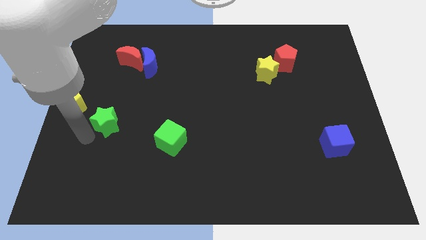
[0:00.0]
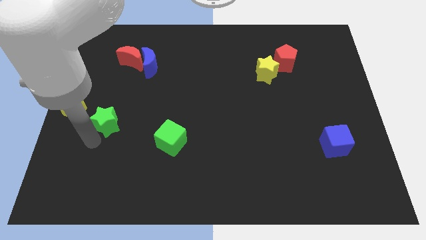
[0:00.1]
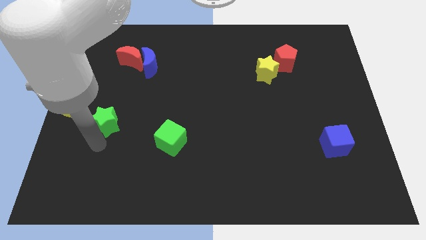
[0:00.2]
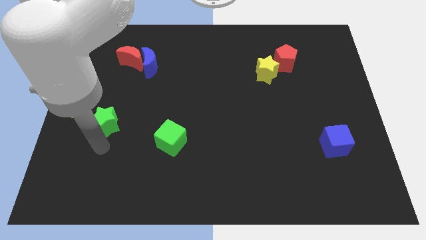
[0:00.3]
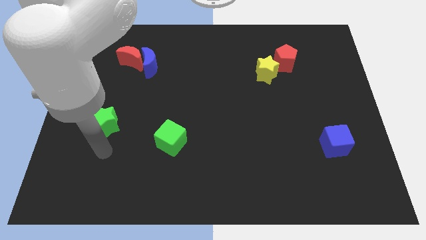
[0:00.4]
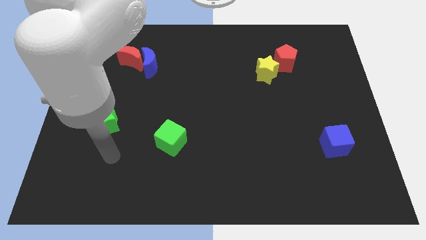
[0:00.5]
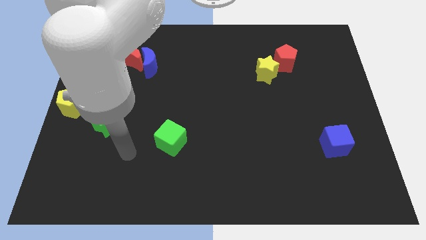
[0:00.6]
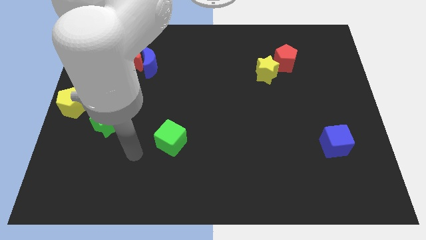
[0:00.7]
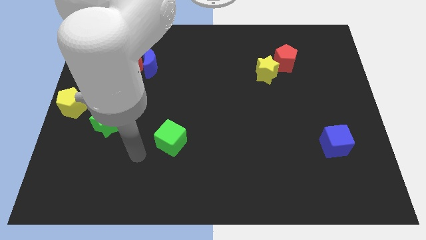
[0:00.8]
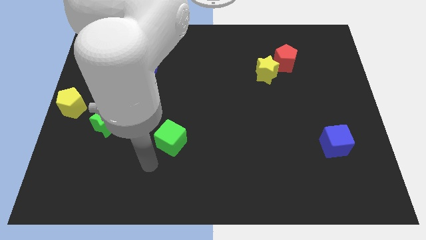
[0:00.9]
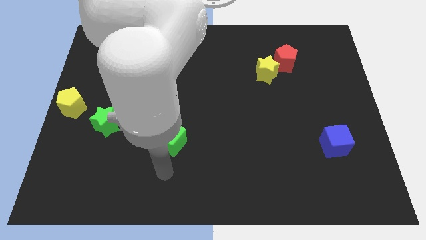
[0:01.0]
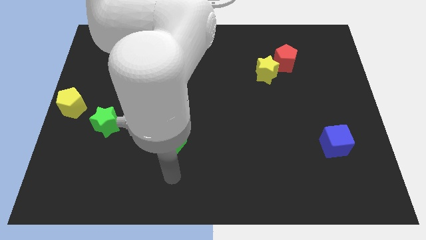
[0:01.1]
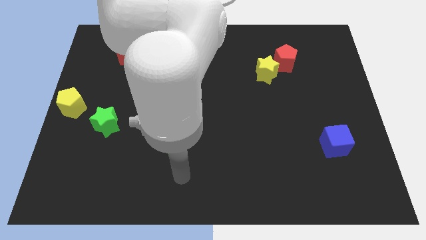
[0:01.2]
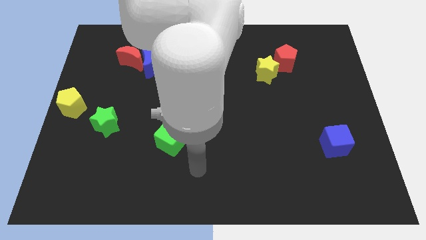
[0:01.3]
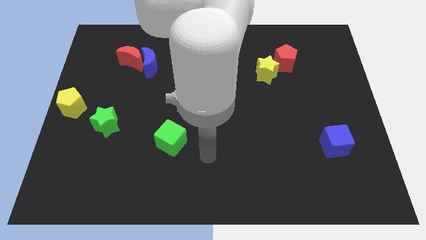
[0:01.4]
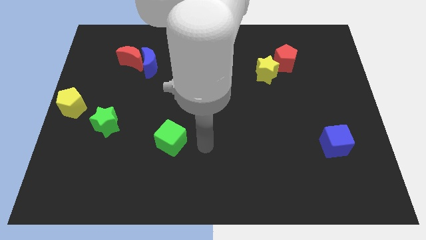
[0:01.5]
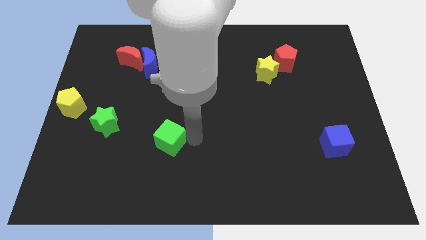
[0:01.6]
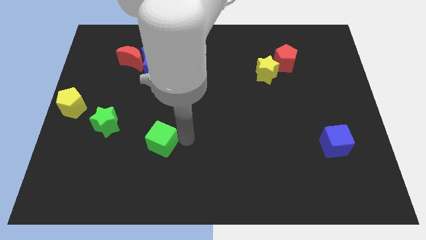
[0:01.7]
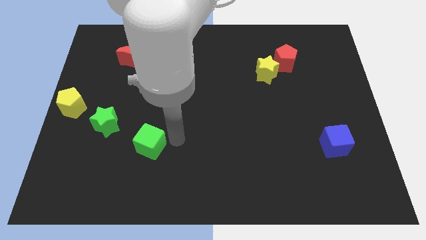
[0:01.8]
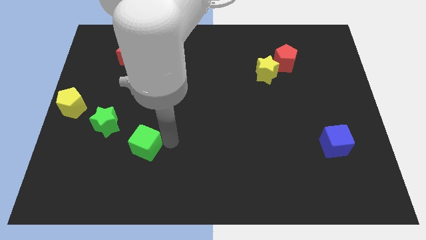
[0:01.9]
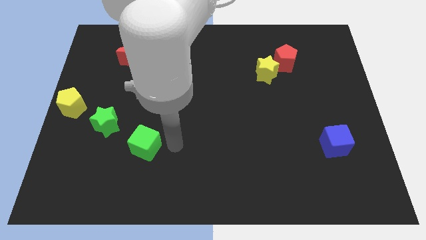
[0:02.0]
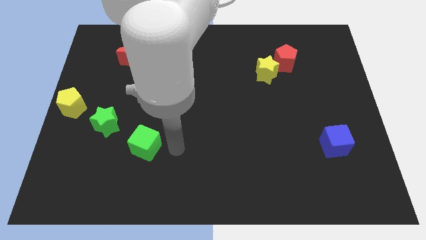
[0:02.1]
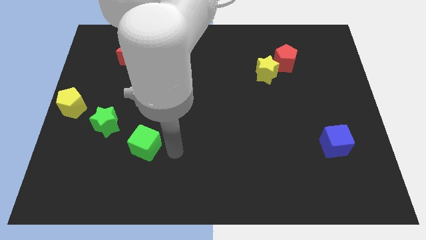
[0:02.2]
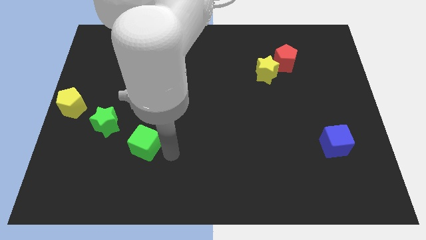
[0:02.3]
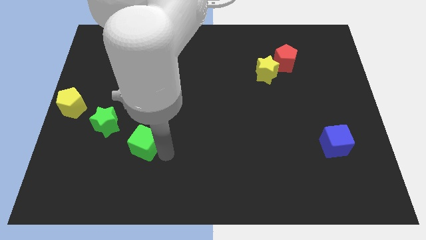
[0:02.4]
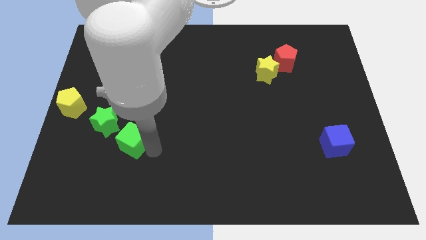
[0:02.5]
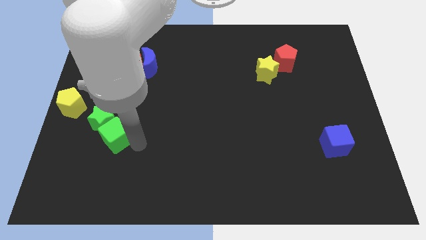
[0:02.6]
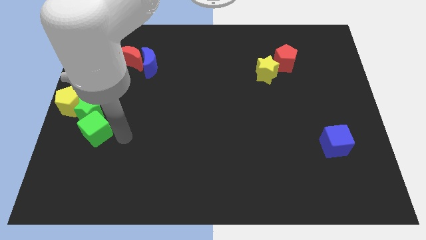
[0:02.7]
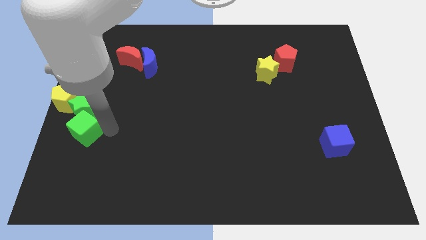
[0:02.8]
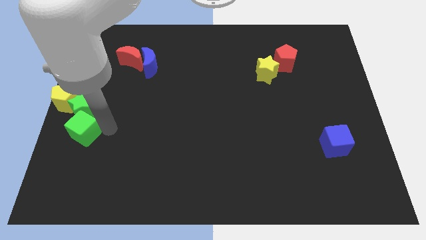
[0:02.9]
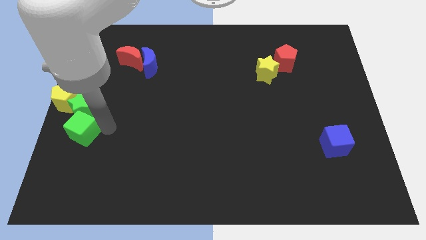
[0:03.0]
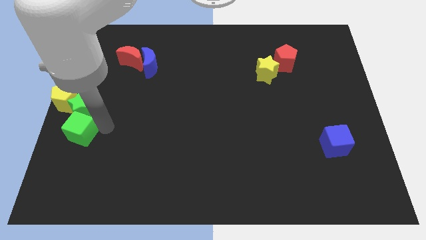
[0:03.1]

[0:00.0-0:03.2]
push the green cube into the green star

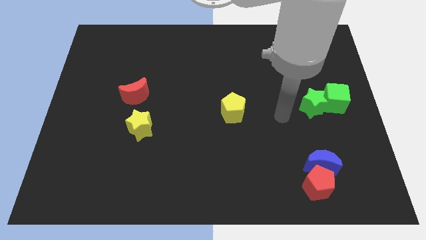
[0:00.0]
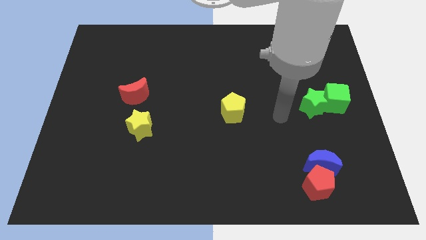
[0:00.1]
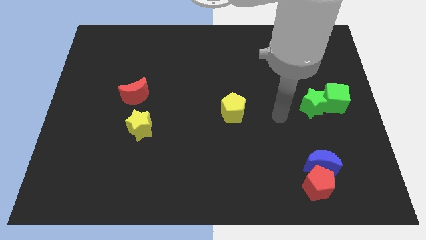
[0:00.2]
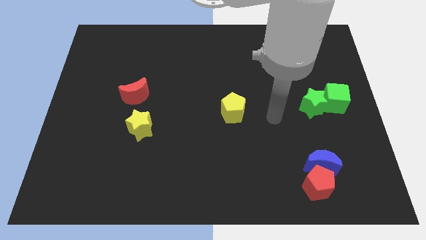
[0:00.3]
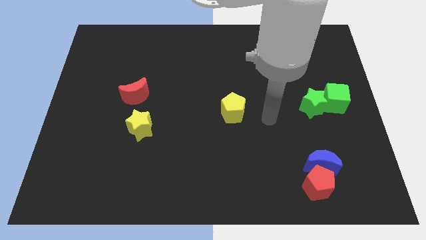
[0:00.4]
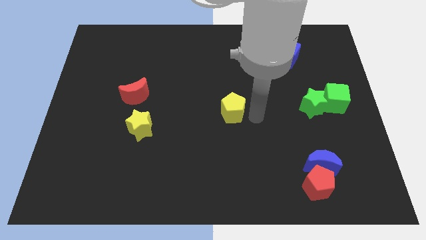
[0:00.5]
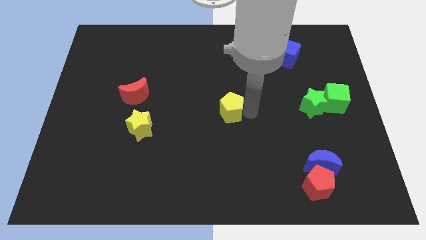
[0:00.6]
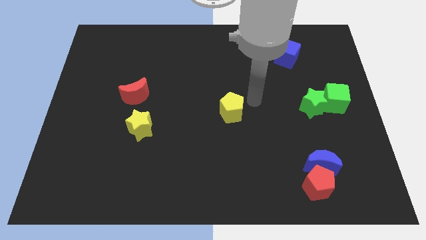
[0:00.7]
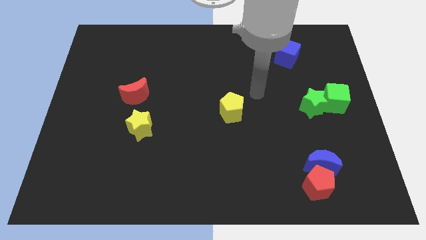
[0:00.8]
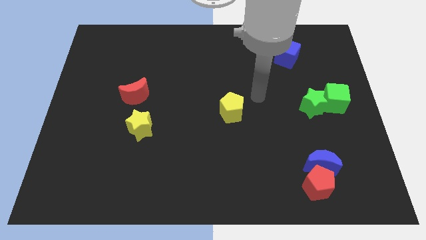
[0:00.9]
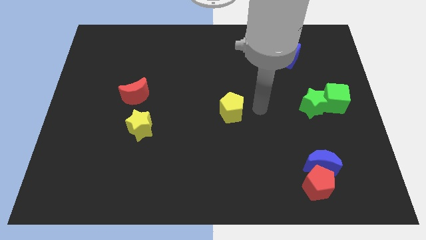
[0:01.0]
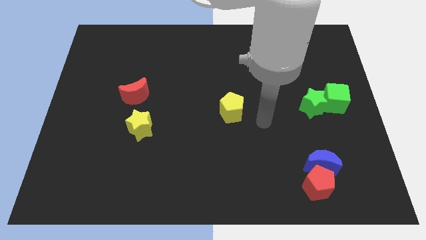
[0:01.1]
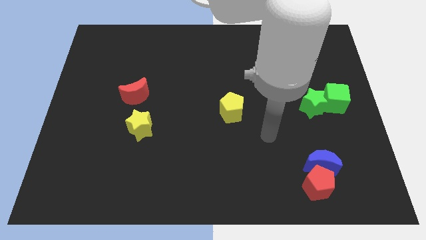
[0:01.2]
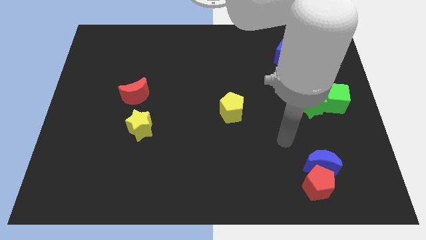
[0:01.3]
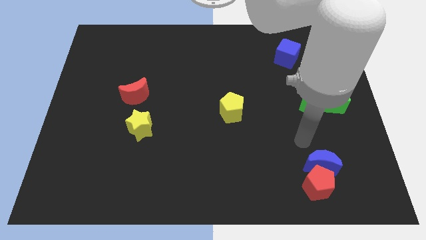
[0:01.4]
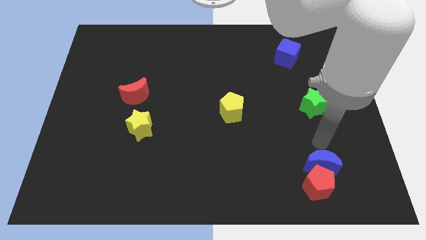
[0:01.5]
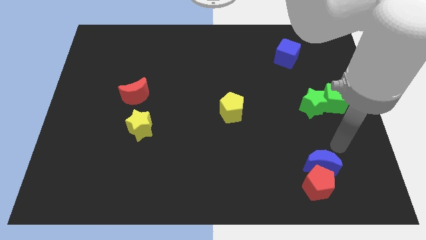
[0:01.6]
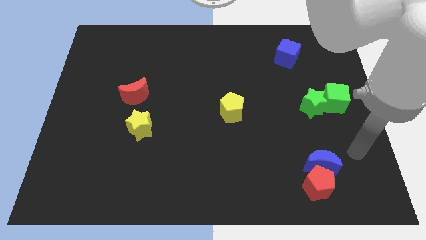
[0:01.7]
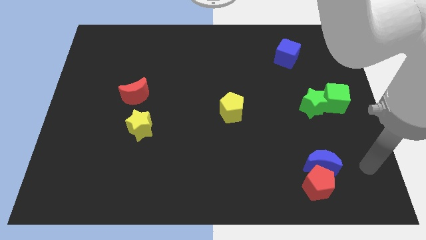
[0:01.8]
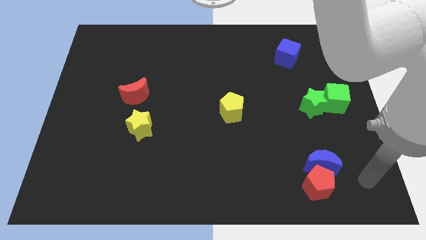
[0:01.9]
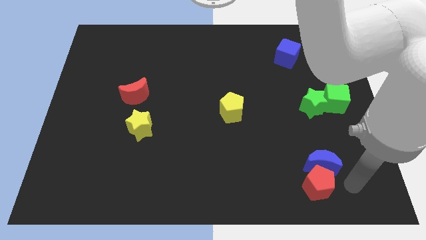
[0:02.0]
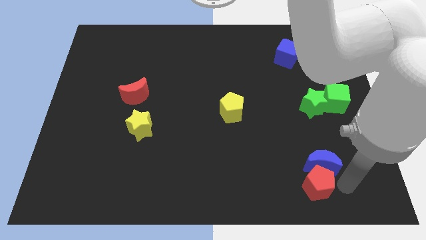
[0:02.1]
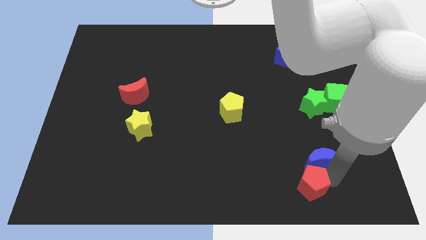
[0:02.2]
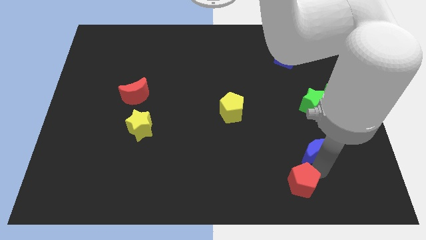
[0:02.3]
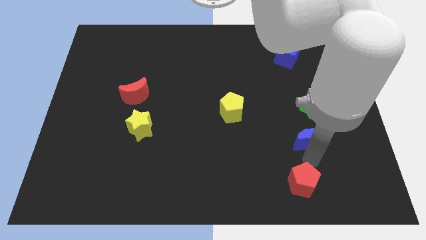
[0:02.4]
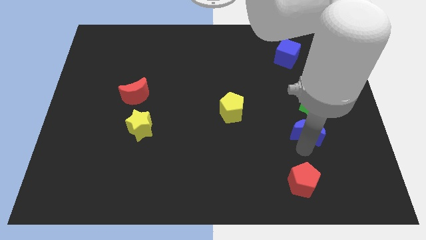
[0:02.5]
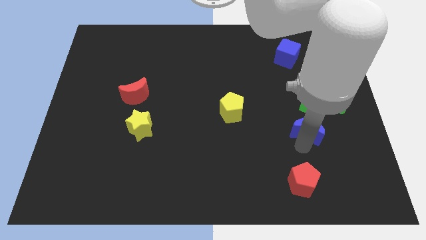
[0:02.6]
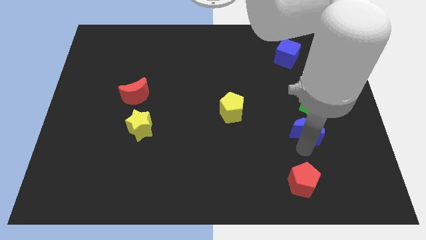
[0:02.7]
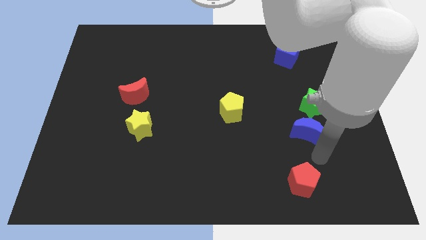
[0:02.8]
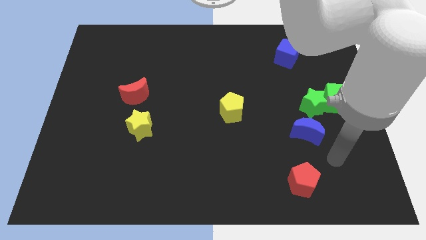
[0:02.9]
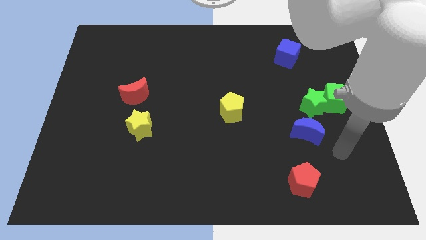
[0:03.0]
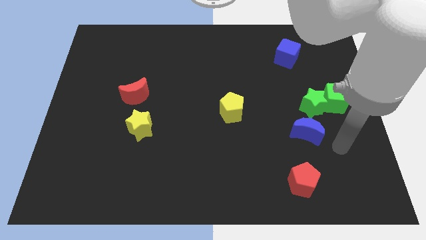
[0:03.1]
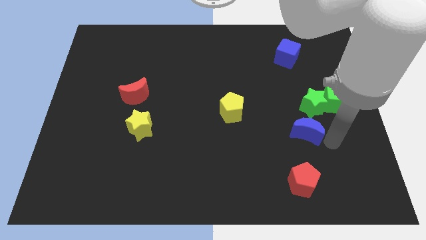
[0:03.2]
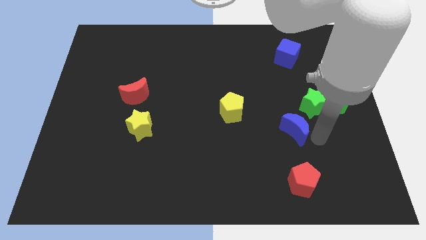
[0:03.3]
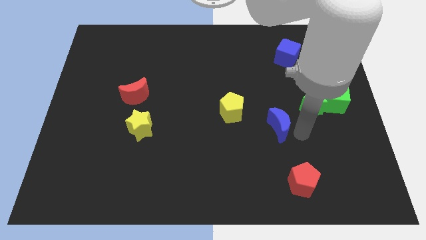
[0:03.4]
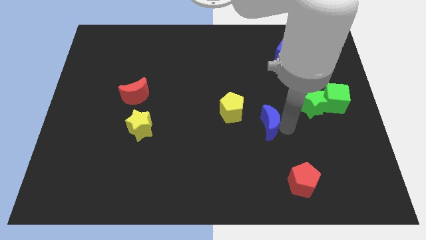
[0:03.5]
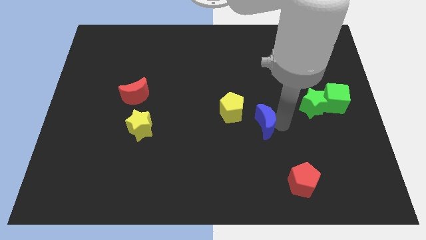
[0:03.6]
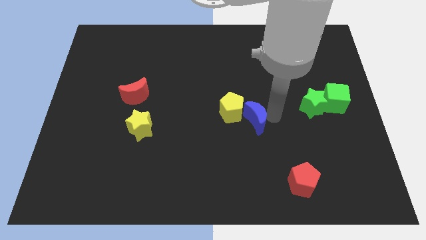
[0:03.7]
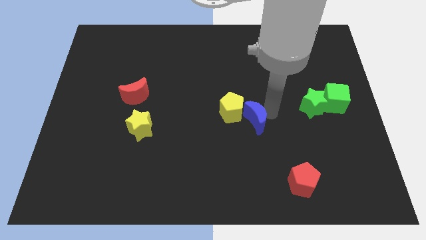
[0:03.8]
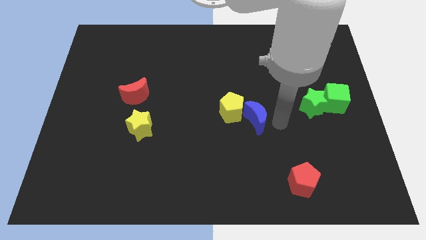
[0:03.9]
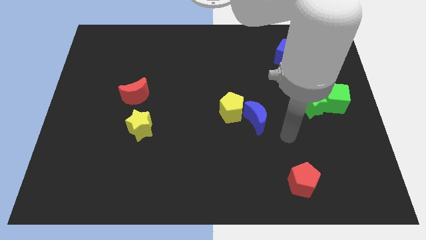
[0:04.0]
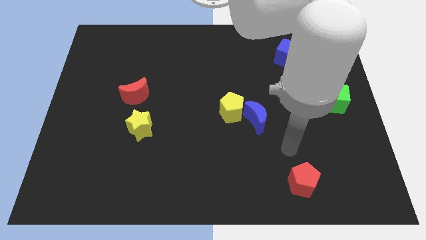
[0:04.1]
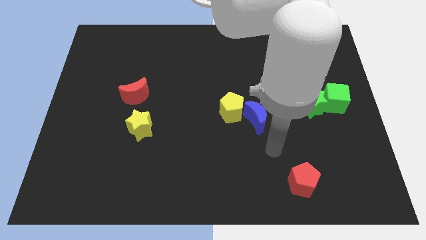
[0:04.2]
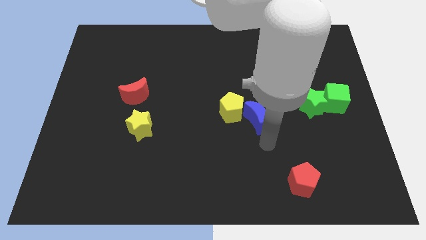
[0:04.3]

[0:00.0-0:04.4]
move the blue crescent to the right side of the yellow pentagon

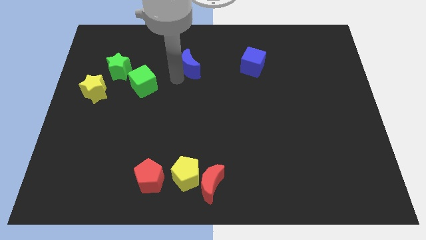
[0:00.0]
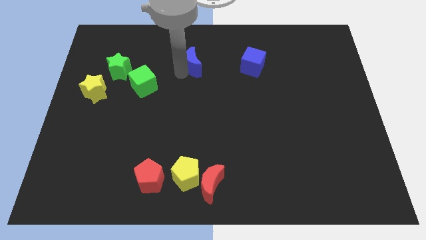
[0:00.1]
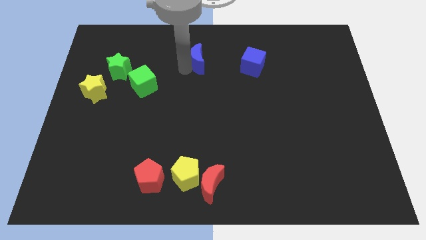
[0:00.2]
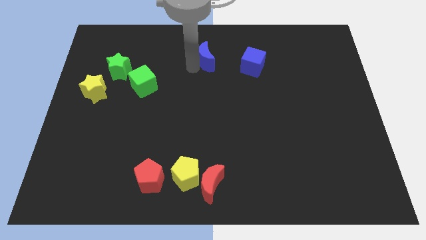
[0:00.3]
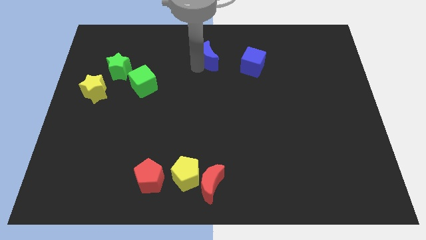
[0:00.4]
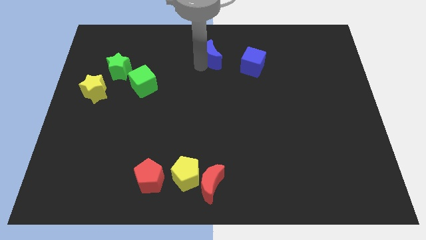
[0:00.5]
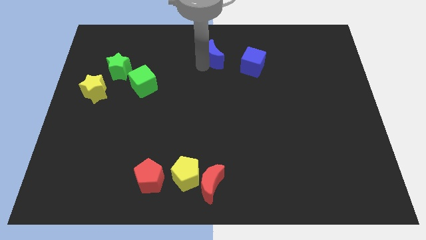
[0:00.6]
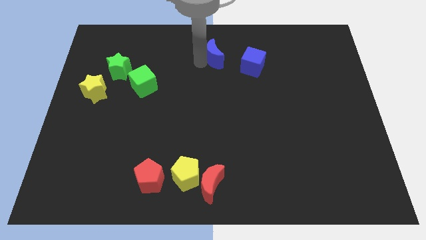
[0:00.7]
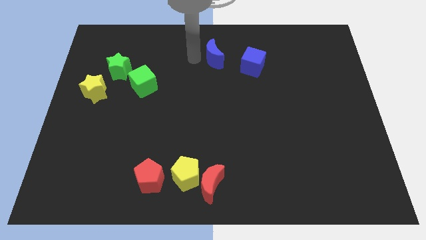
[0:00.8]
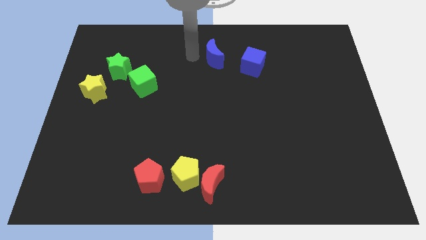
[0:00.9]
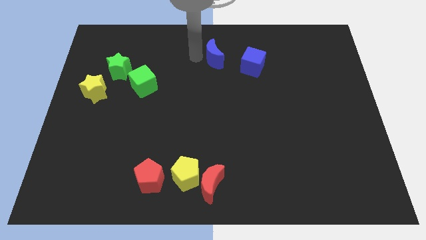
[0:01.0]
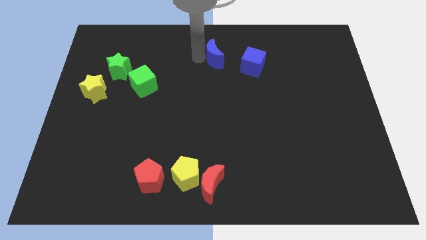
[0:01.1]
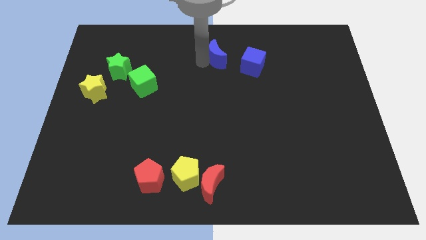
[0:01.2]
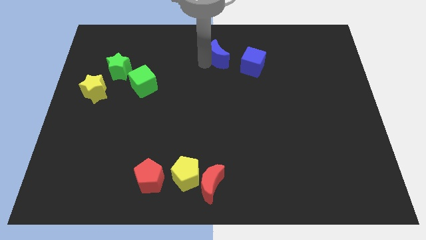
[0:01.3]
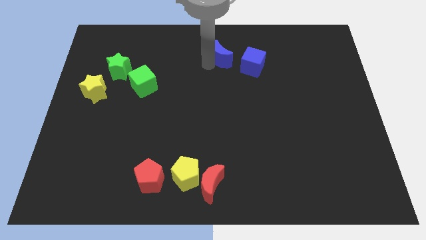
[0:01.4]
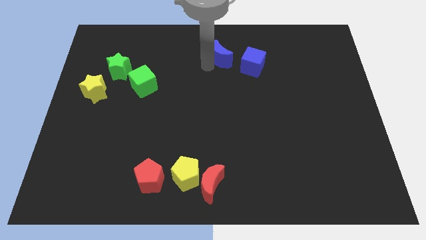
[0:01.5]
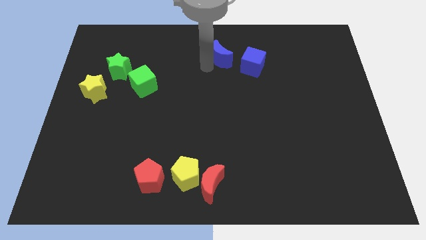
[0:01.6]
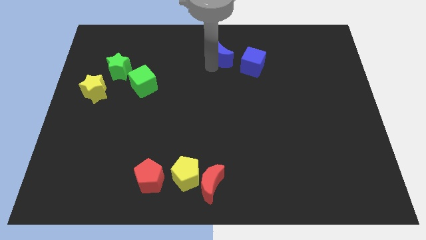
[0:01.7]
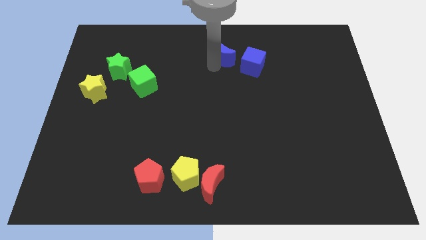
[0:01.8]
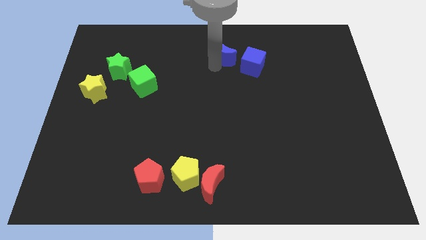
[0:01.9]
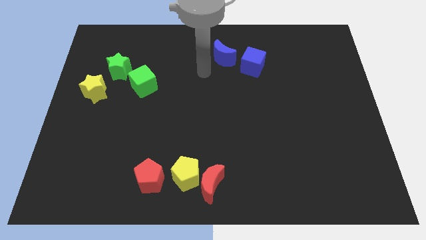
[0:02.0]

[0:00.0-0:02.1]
push the blue crescent to the top left side of the blue cube
